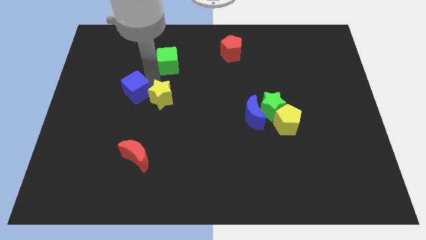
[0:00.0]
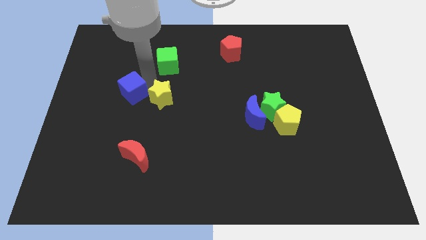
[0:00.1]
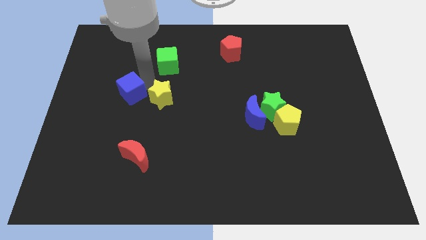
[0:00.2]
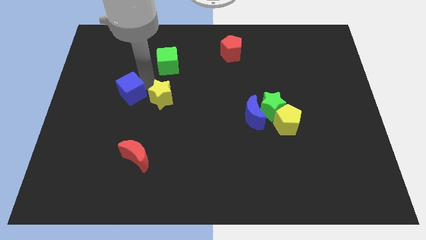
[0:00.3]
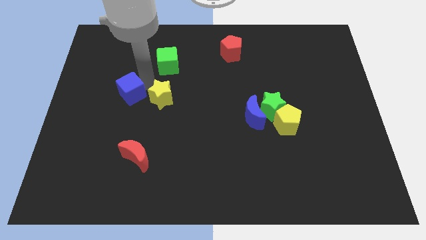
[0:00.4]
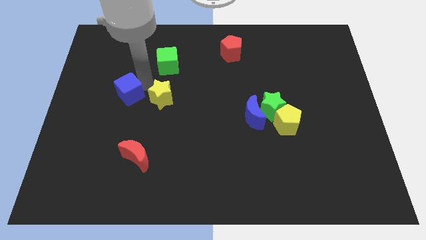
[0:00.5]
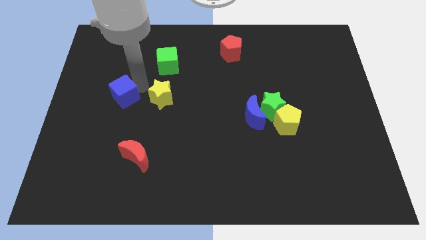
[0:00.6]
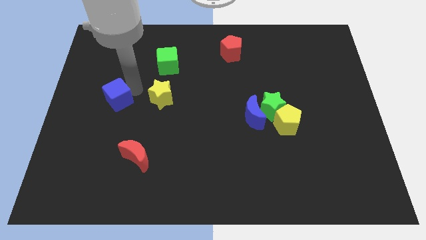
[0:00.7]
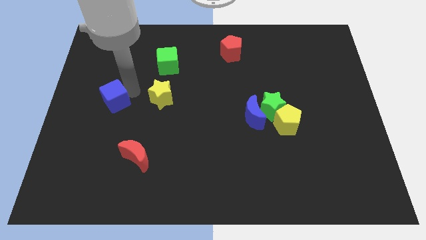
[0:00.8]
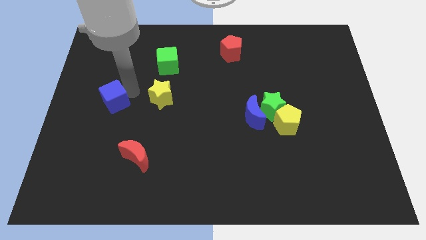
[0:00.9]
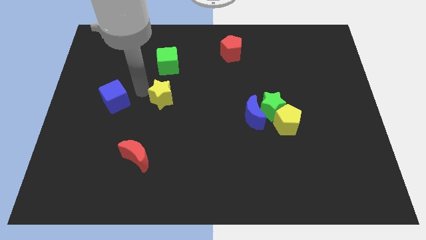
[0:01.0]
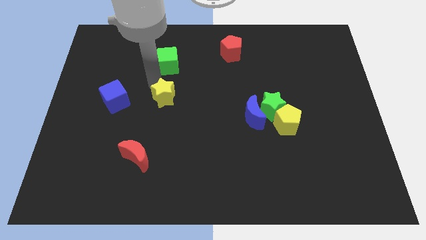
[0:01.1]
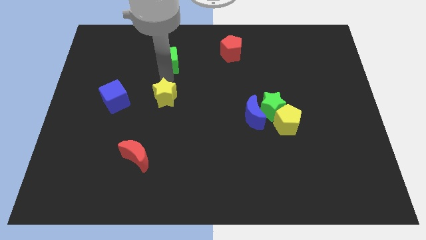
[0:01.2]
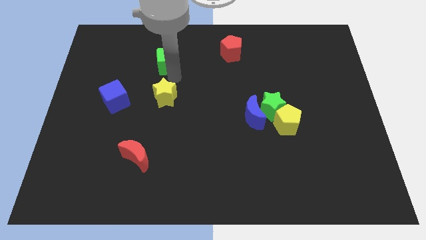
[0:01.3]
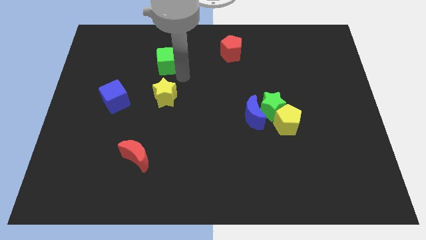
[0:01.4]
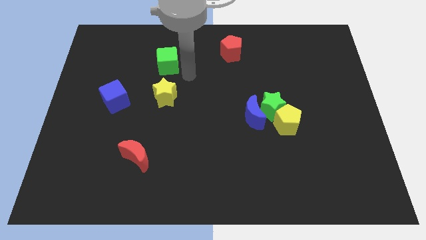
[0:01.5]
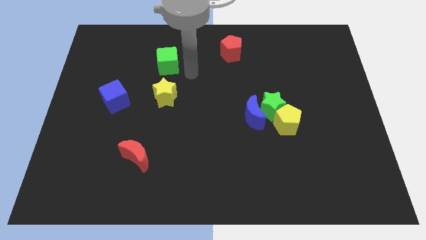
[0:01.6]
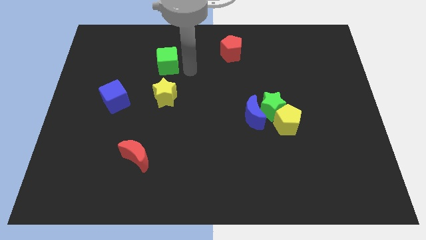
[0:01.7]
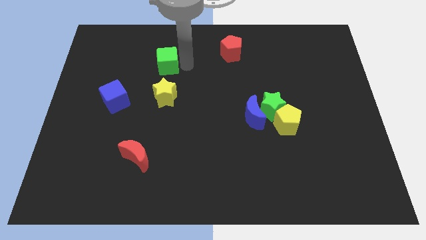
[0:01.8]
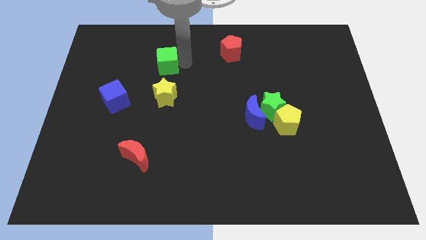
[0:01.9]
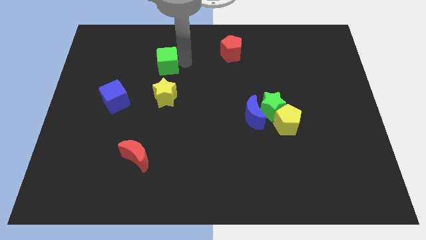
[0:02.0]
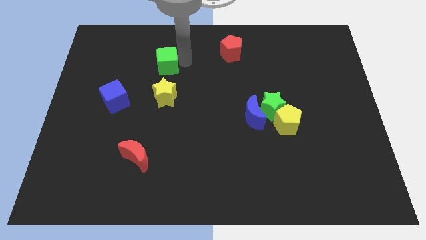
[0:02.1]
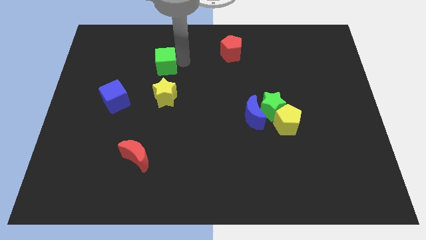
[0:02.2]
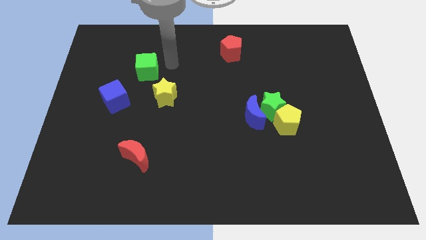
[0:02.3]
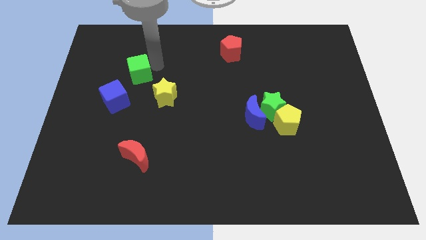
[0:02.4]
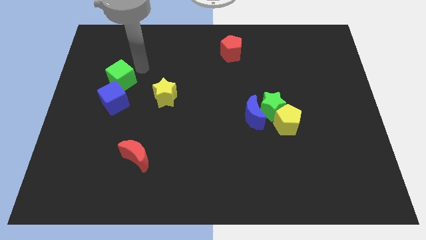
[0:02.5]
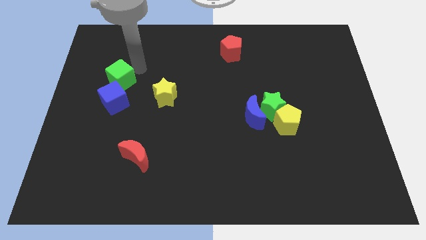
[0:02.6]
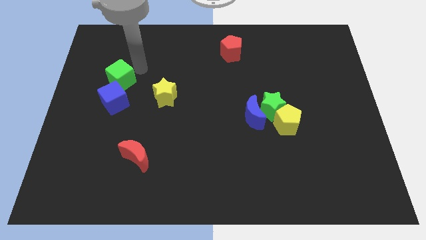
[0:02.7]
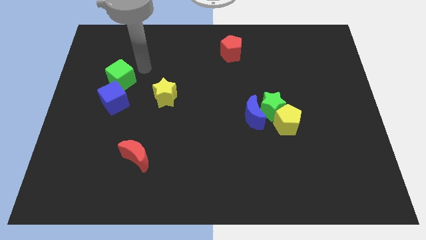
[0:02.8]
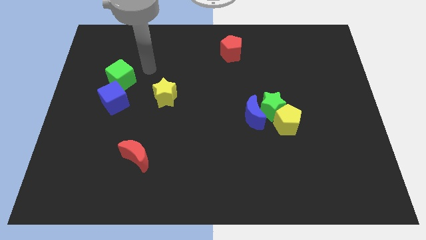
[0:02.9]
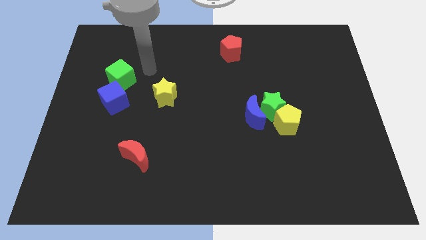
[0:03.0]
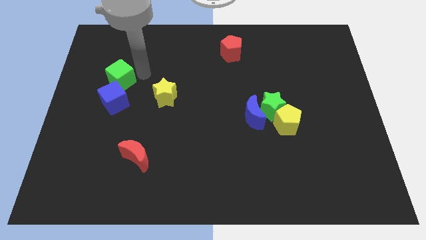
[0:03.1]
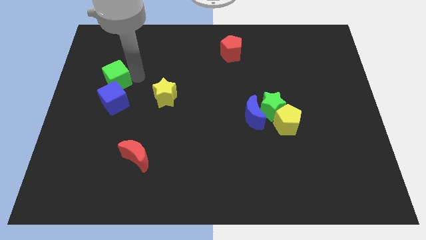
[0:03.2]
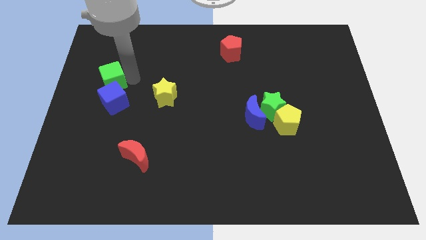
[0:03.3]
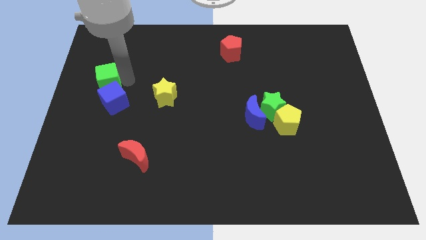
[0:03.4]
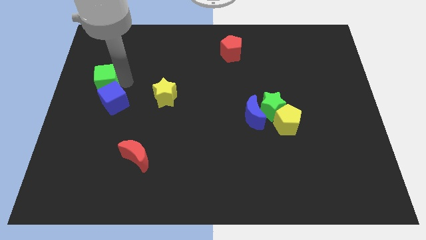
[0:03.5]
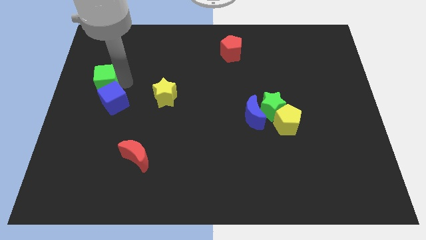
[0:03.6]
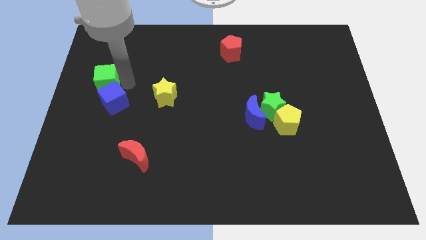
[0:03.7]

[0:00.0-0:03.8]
push the blue cube and green cube towards the center left of the board

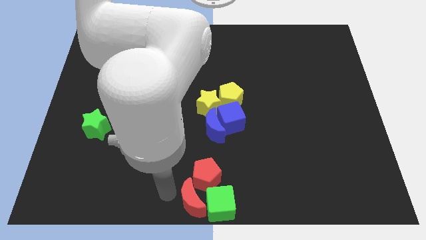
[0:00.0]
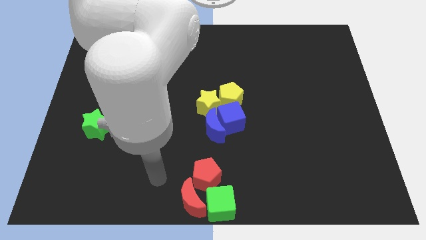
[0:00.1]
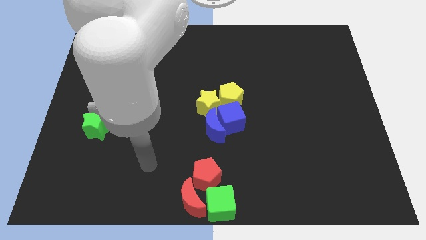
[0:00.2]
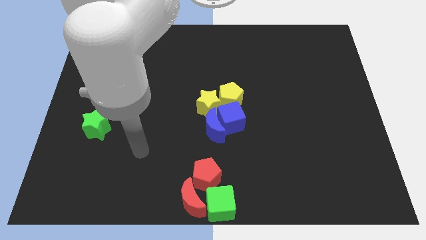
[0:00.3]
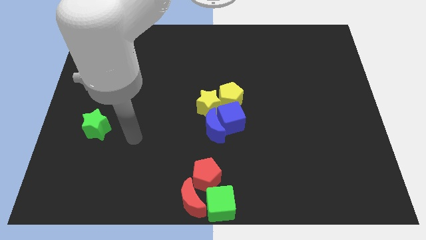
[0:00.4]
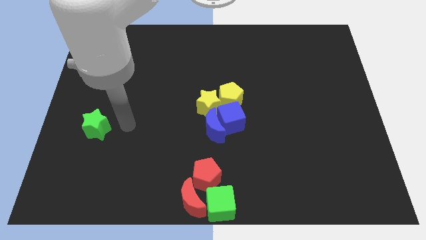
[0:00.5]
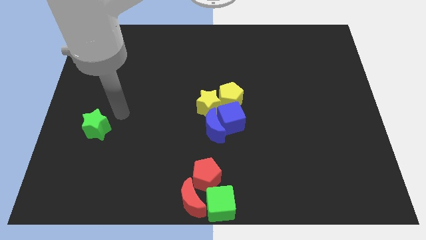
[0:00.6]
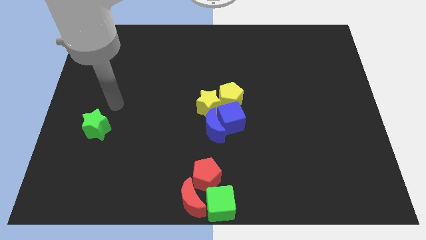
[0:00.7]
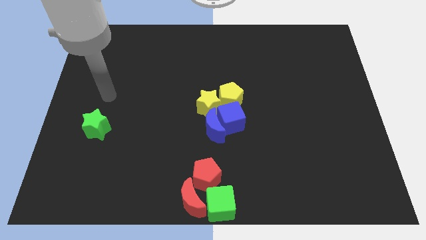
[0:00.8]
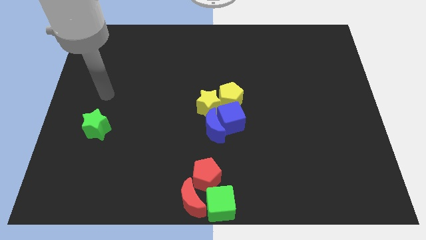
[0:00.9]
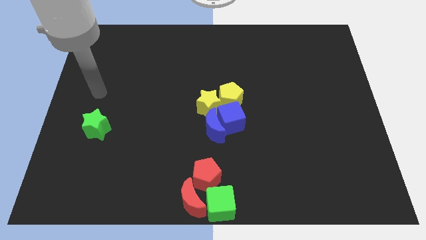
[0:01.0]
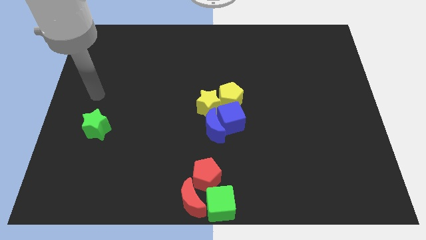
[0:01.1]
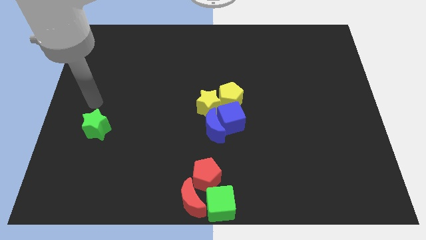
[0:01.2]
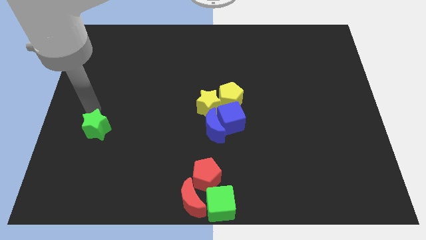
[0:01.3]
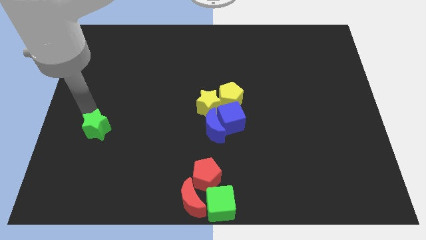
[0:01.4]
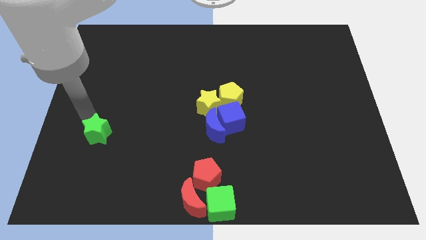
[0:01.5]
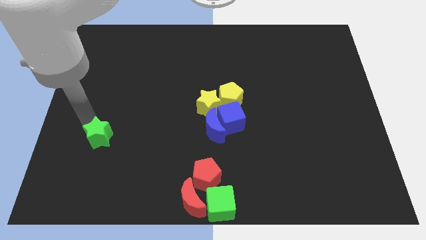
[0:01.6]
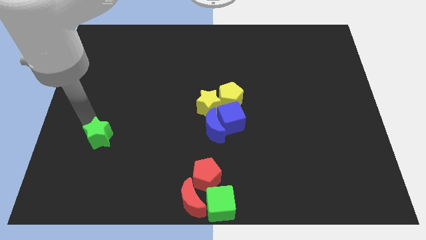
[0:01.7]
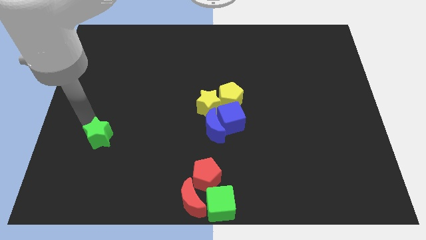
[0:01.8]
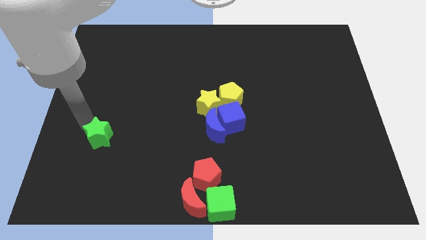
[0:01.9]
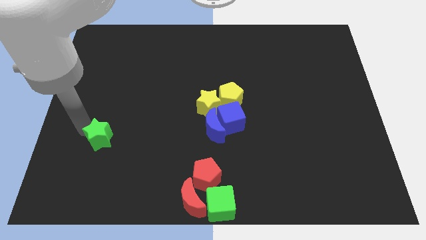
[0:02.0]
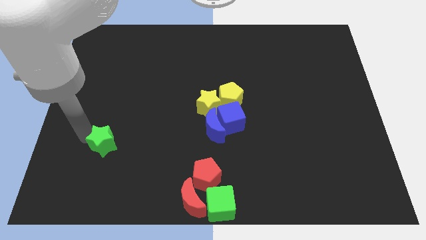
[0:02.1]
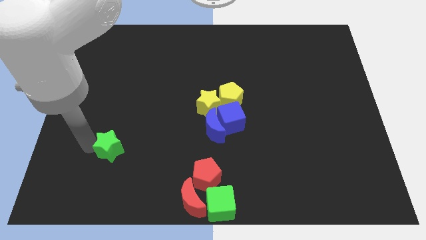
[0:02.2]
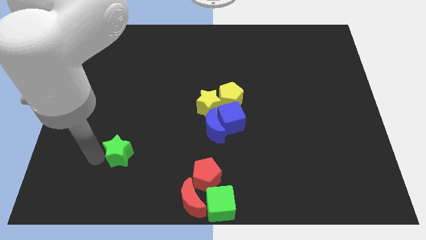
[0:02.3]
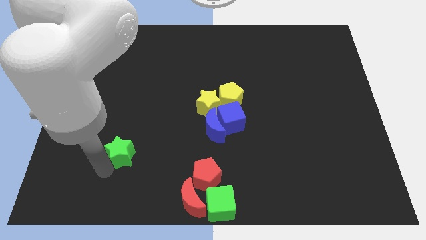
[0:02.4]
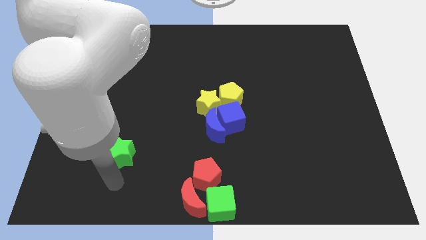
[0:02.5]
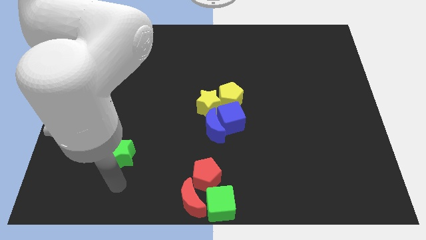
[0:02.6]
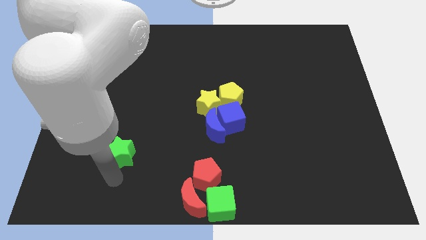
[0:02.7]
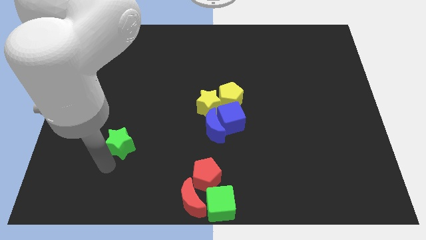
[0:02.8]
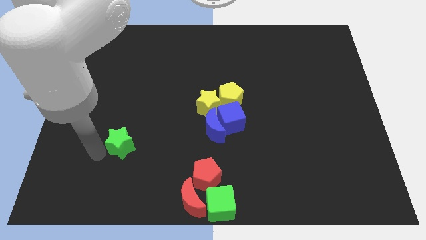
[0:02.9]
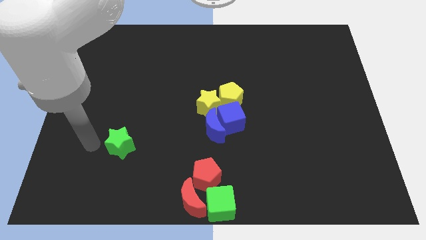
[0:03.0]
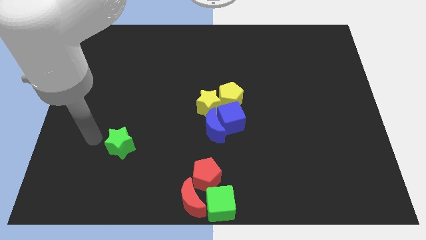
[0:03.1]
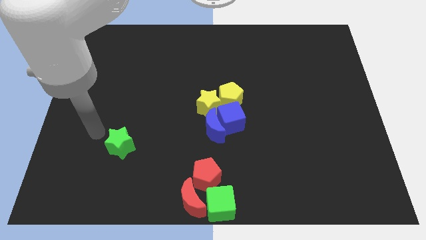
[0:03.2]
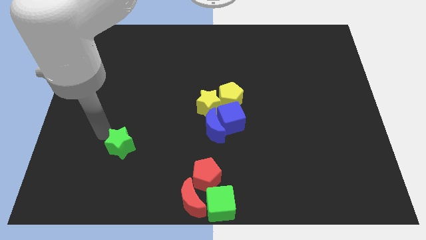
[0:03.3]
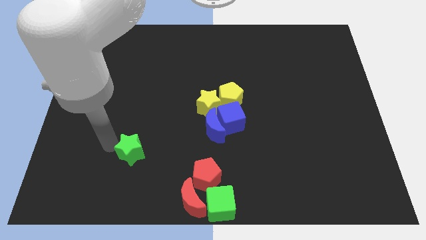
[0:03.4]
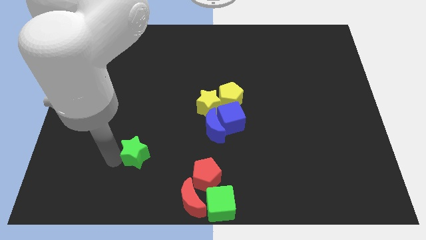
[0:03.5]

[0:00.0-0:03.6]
move the green star towards red blocks

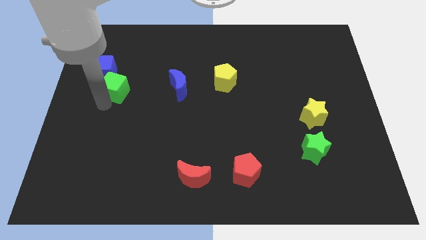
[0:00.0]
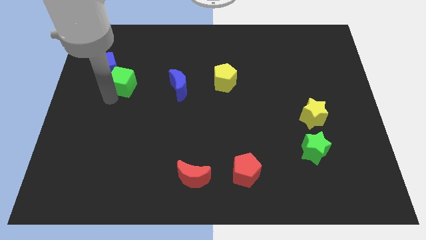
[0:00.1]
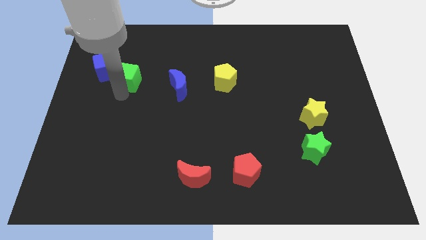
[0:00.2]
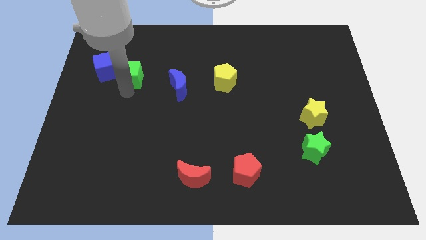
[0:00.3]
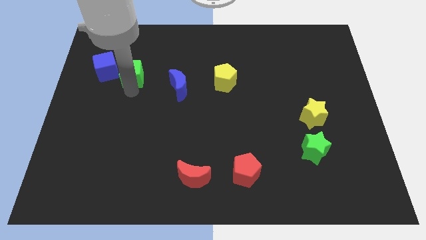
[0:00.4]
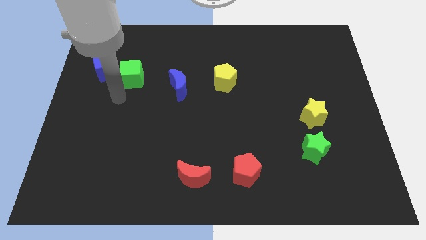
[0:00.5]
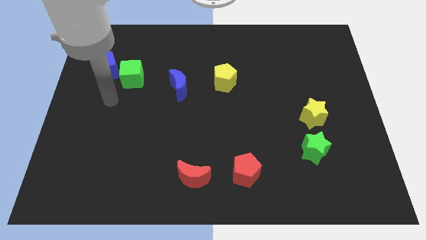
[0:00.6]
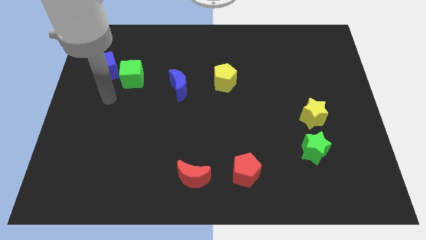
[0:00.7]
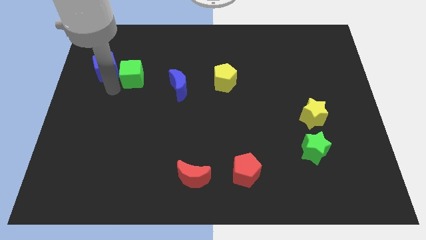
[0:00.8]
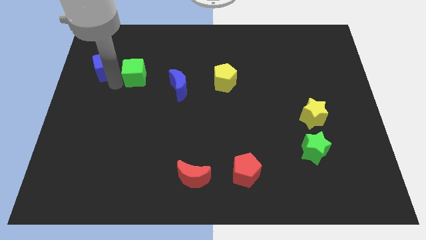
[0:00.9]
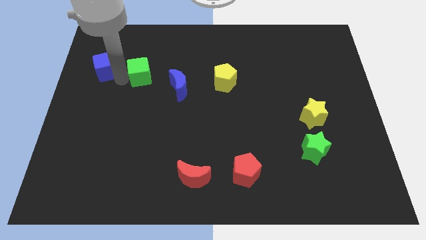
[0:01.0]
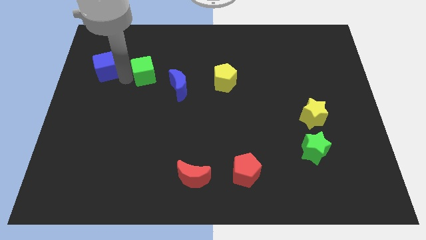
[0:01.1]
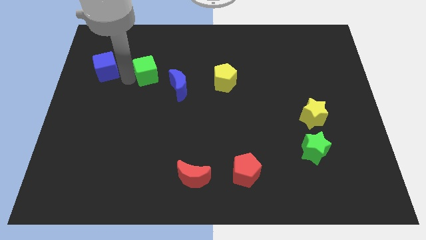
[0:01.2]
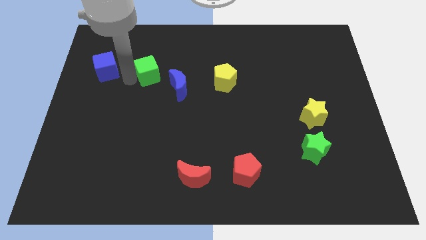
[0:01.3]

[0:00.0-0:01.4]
place green cube beside blue cube

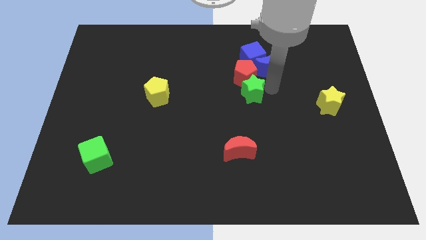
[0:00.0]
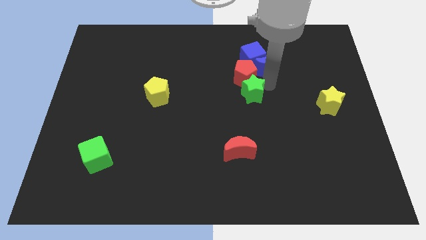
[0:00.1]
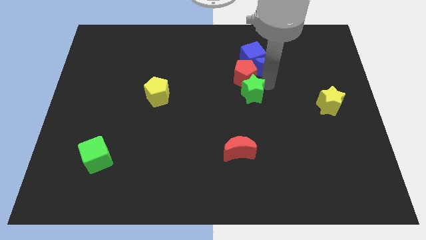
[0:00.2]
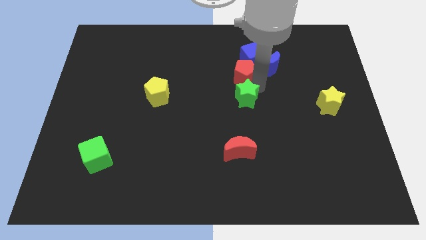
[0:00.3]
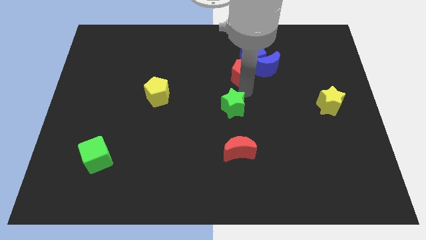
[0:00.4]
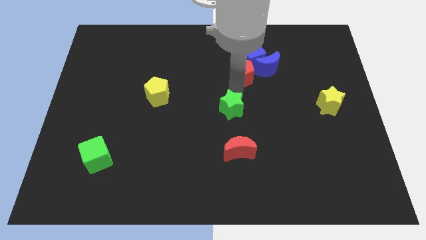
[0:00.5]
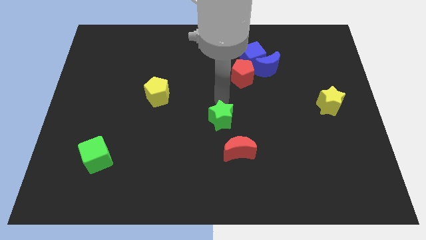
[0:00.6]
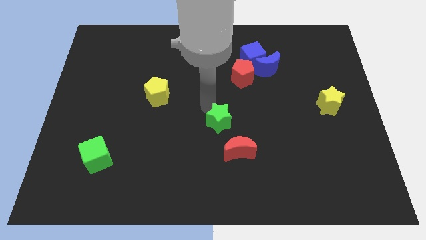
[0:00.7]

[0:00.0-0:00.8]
separate the green star from red pentagon
